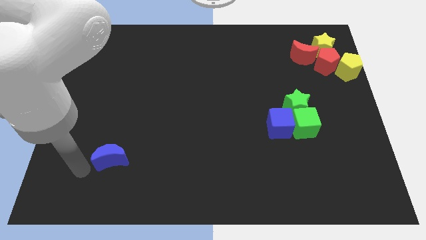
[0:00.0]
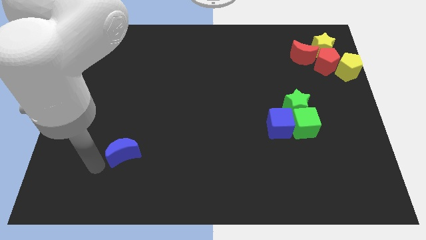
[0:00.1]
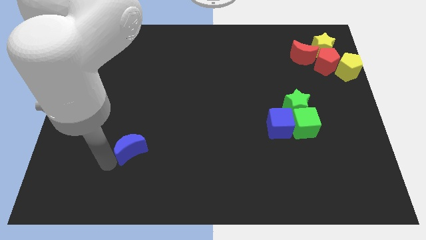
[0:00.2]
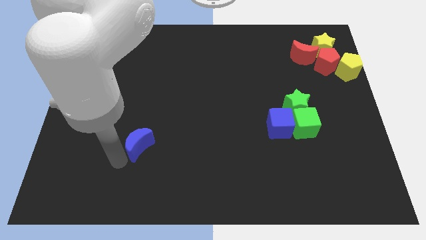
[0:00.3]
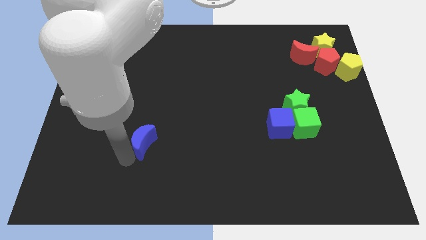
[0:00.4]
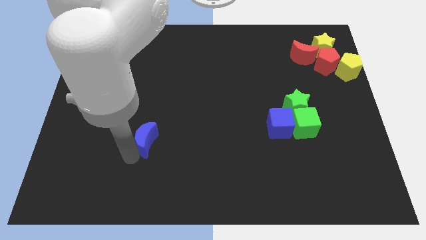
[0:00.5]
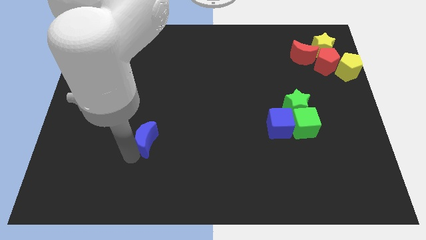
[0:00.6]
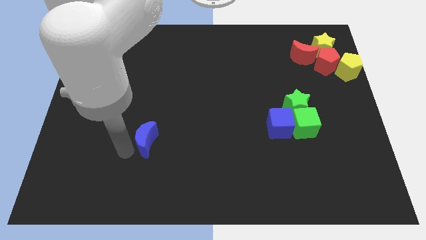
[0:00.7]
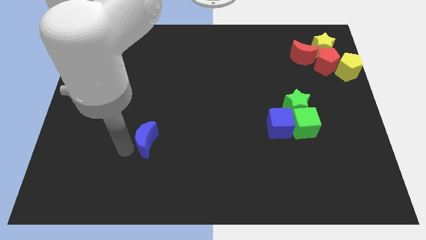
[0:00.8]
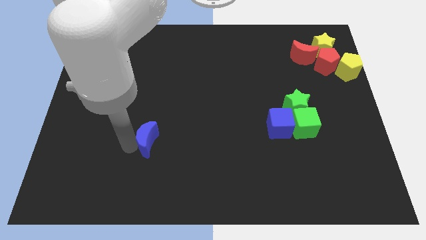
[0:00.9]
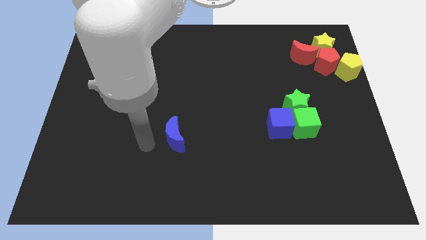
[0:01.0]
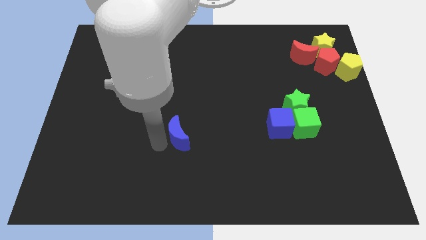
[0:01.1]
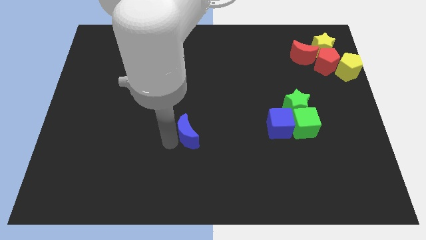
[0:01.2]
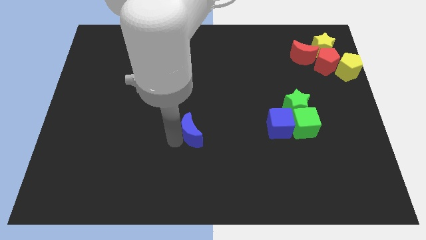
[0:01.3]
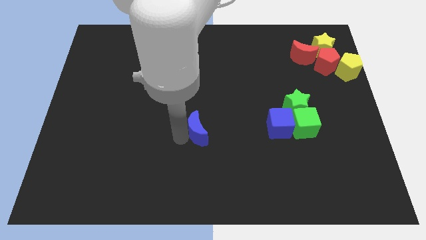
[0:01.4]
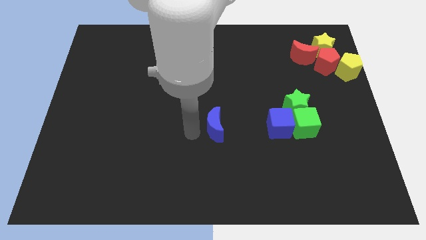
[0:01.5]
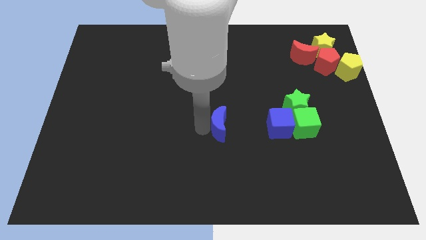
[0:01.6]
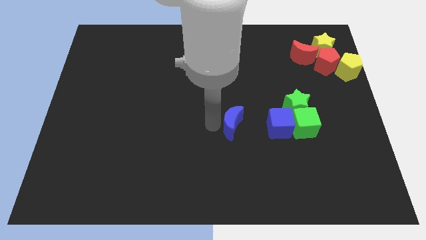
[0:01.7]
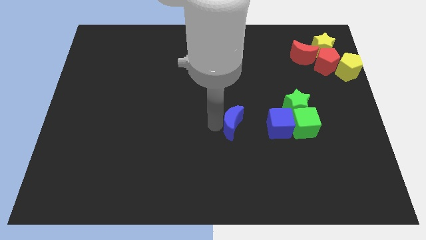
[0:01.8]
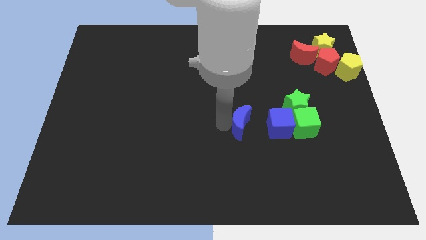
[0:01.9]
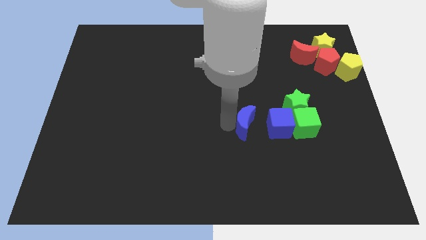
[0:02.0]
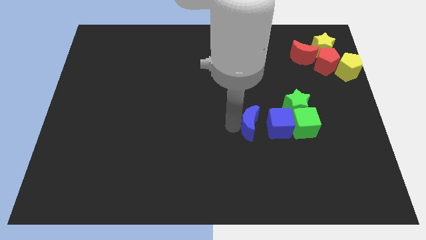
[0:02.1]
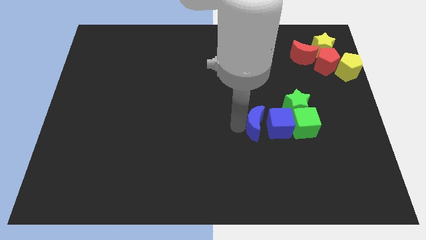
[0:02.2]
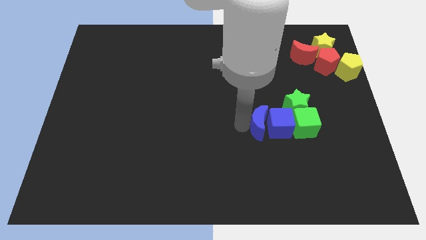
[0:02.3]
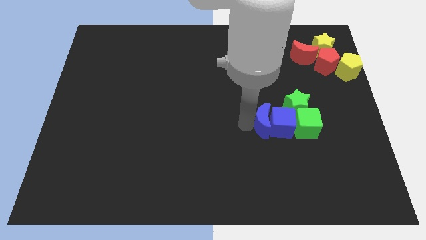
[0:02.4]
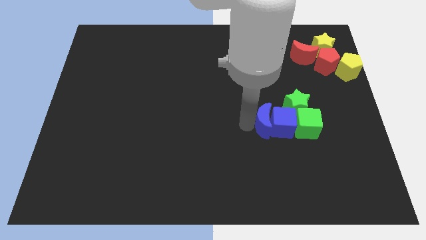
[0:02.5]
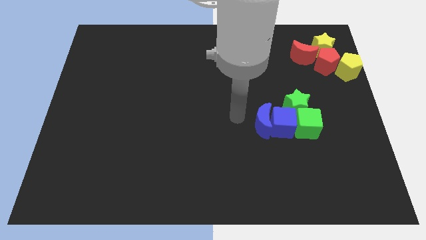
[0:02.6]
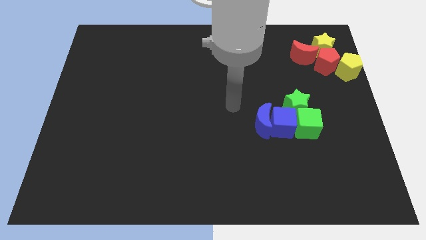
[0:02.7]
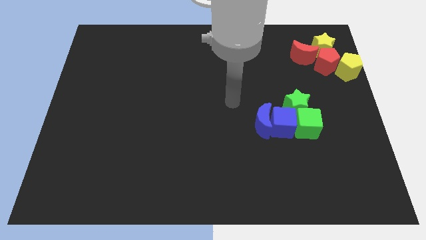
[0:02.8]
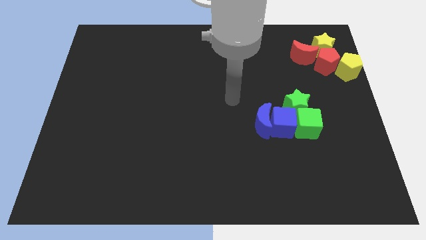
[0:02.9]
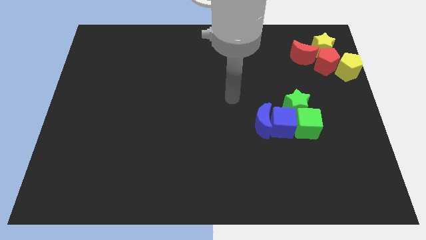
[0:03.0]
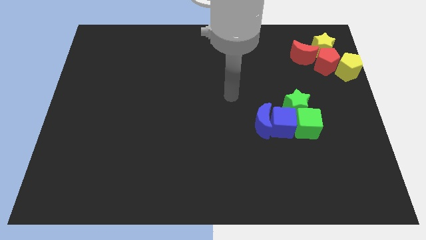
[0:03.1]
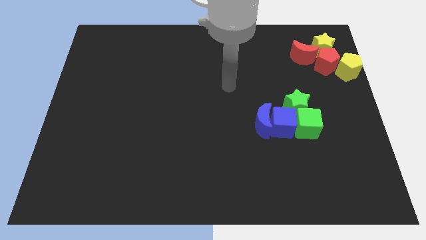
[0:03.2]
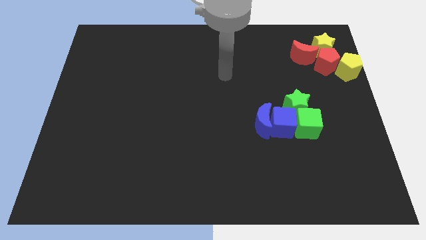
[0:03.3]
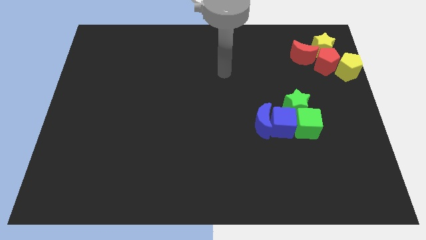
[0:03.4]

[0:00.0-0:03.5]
move the arm upwards of the board

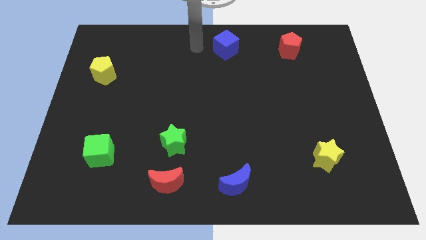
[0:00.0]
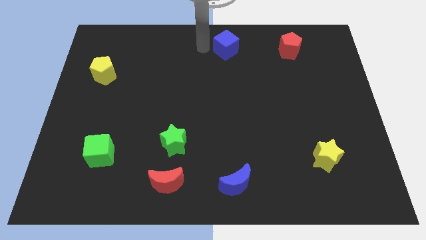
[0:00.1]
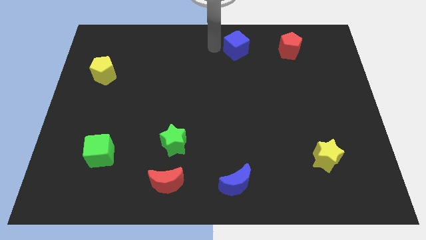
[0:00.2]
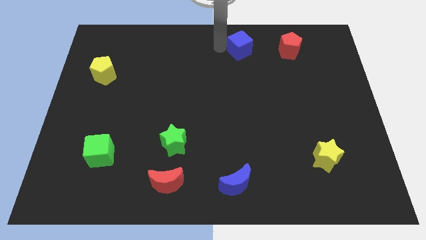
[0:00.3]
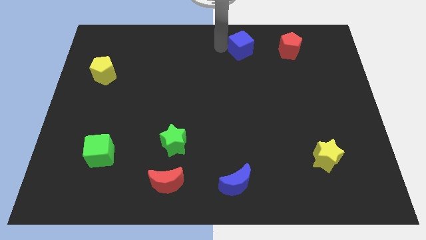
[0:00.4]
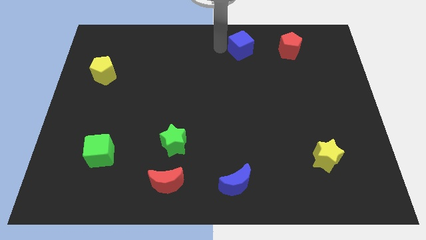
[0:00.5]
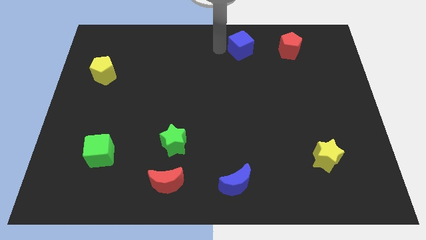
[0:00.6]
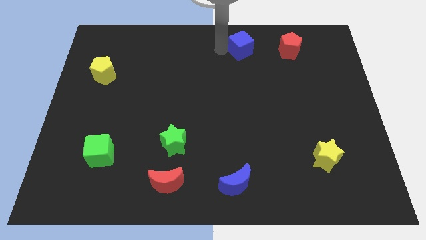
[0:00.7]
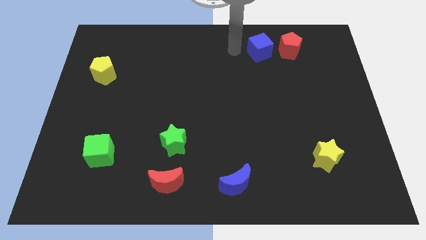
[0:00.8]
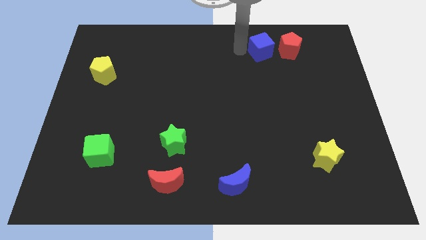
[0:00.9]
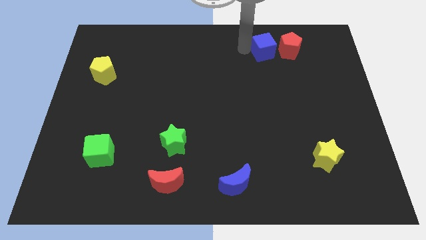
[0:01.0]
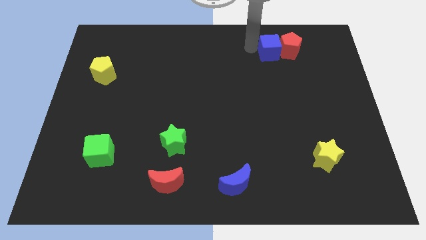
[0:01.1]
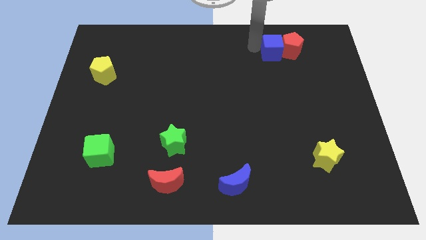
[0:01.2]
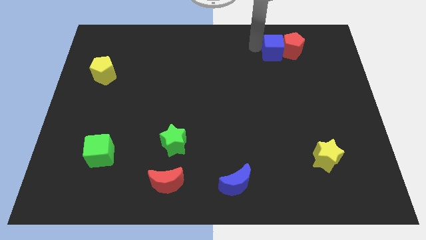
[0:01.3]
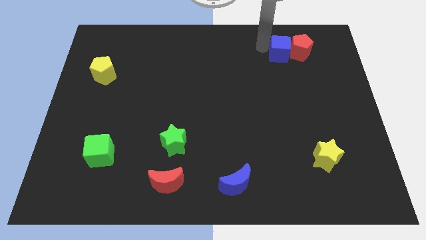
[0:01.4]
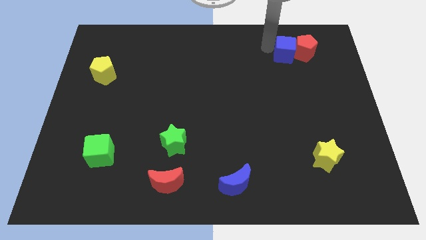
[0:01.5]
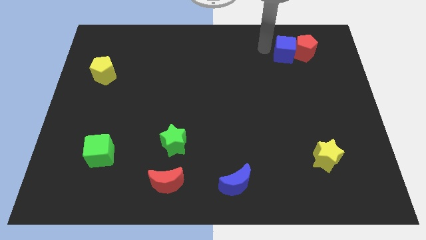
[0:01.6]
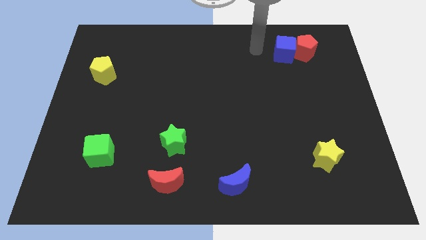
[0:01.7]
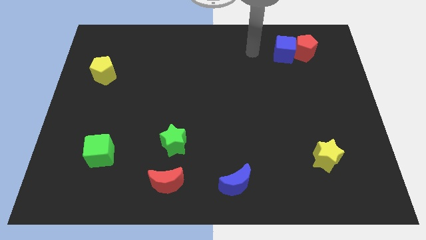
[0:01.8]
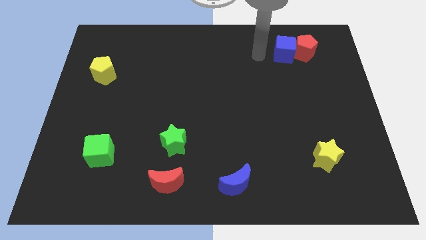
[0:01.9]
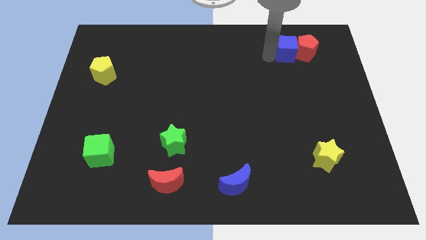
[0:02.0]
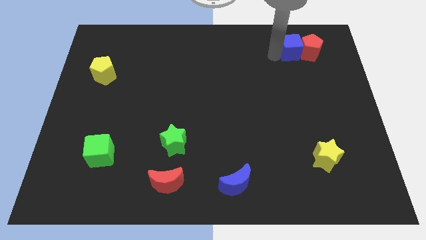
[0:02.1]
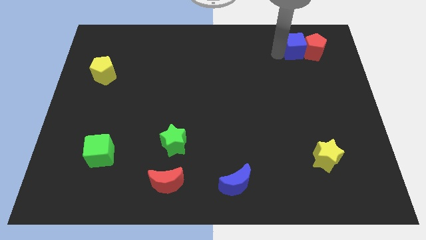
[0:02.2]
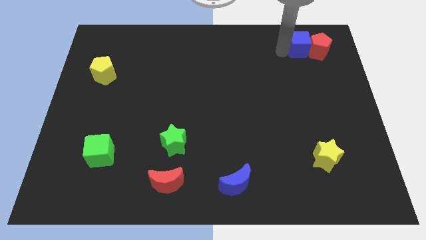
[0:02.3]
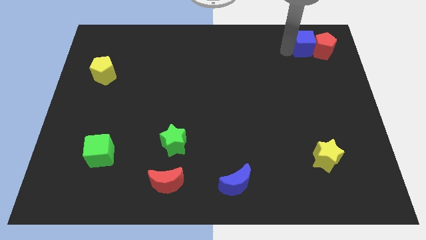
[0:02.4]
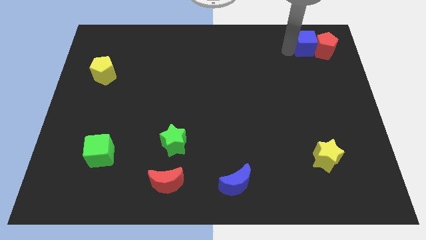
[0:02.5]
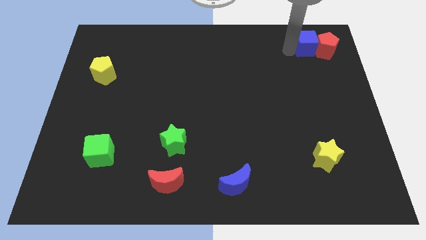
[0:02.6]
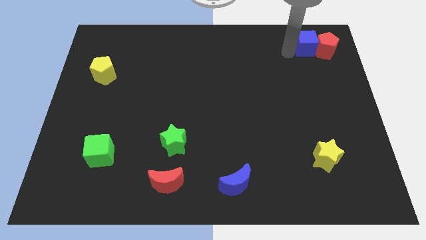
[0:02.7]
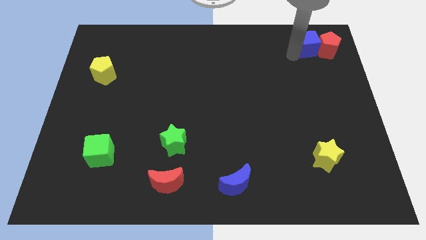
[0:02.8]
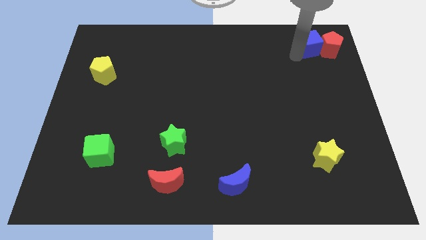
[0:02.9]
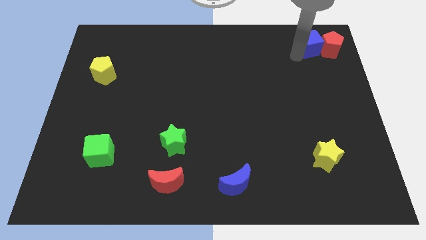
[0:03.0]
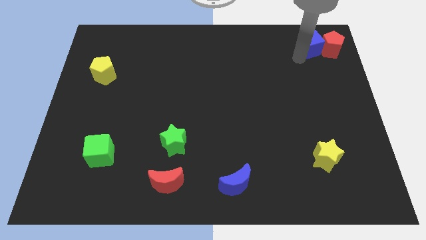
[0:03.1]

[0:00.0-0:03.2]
slide blue cube along with the red pentagon towards the top right

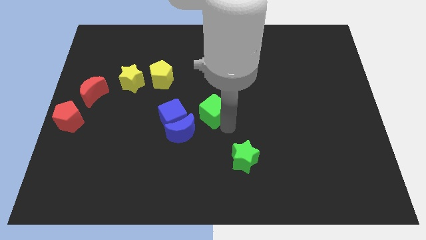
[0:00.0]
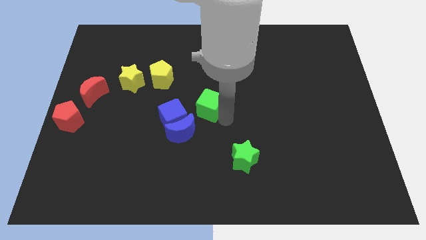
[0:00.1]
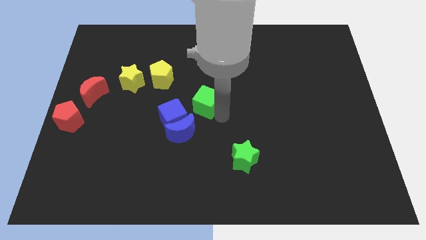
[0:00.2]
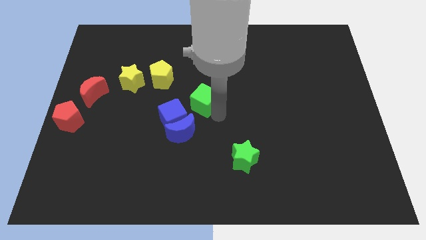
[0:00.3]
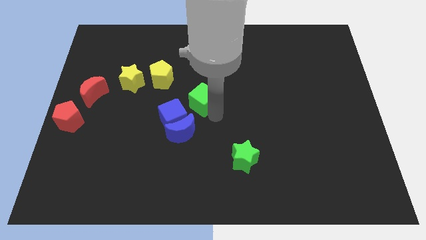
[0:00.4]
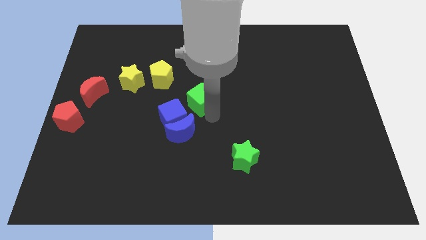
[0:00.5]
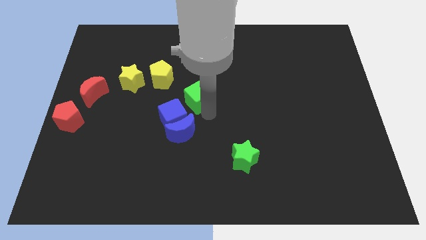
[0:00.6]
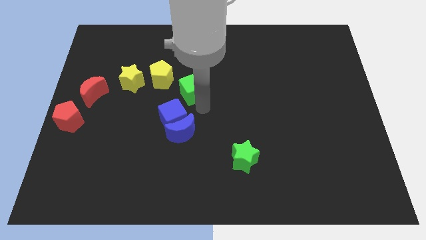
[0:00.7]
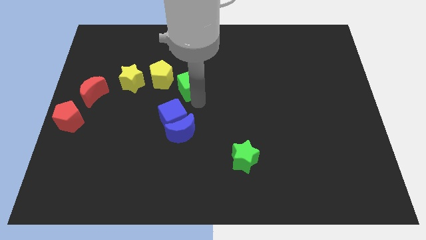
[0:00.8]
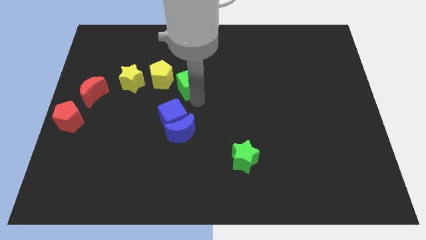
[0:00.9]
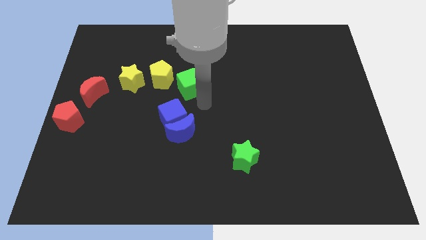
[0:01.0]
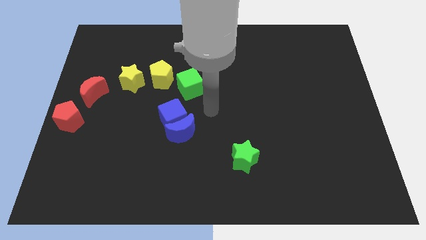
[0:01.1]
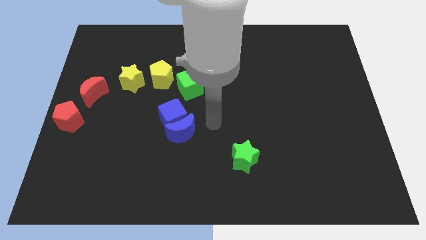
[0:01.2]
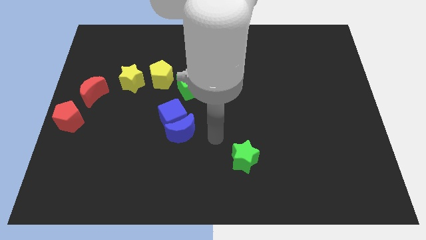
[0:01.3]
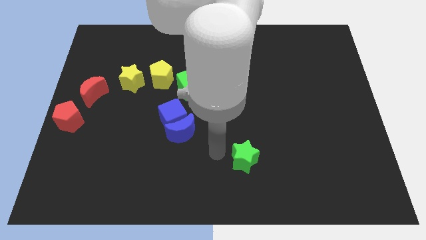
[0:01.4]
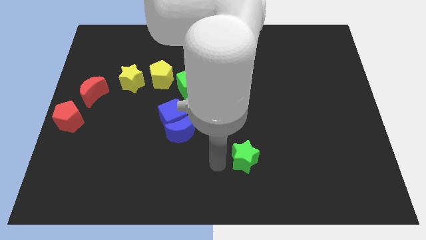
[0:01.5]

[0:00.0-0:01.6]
place the green cube diagonally bottom right to yellow pentagon

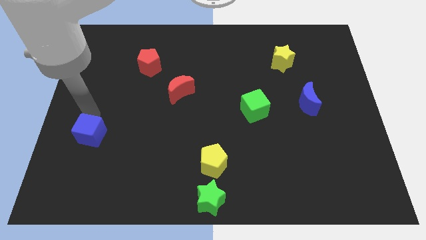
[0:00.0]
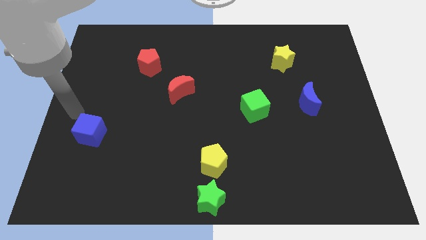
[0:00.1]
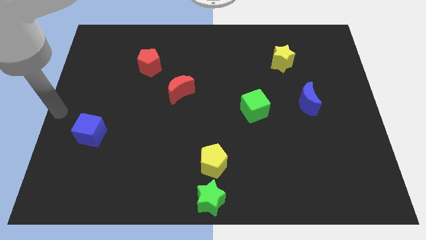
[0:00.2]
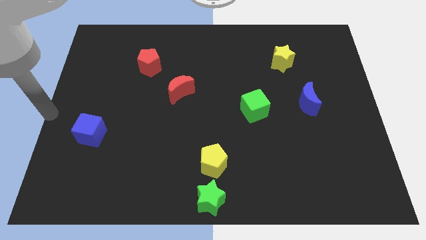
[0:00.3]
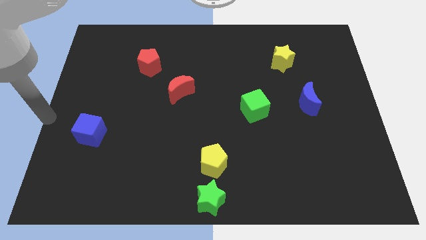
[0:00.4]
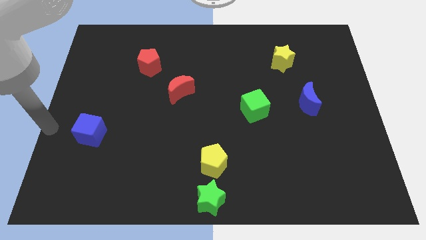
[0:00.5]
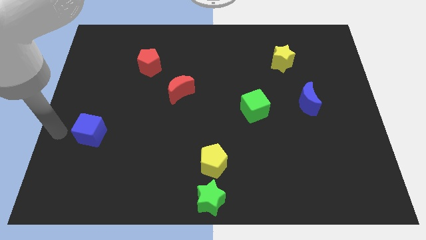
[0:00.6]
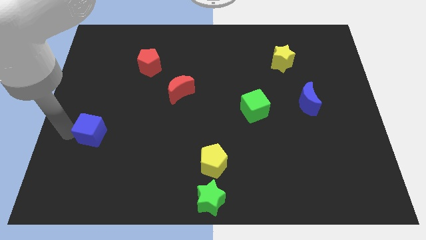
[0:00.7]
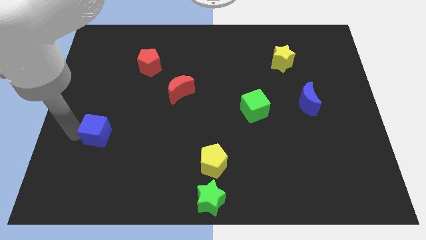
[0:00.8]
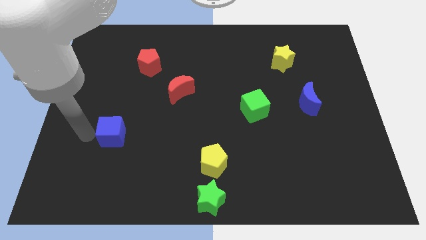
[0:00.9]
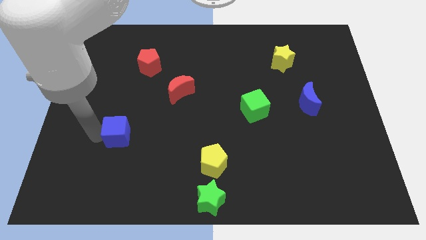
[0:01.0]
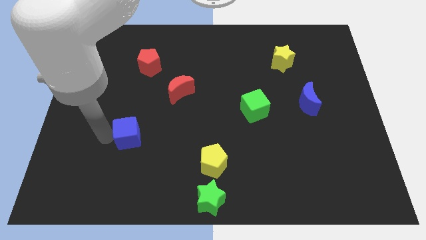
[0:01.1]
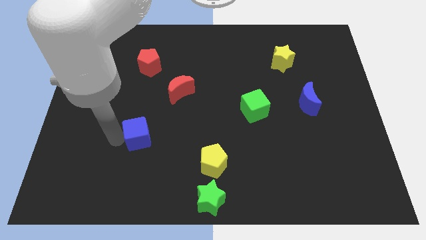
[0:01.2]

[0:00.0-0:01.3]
move the blue cube to the bottom left of the red crescent
